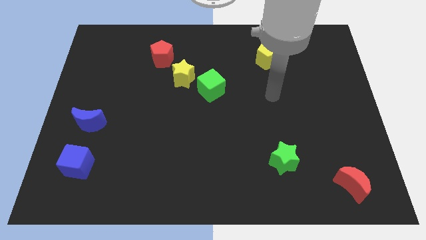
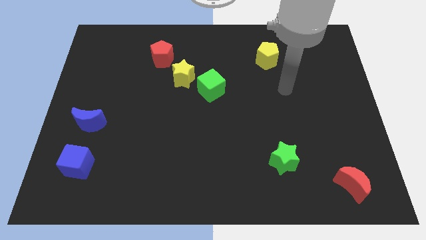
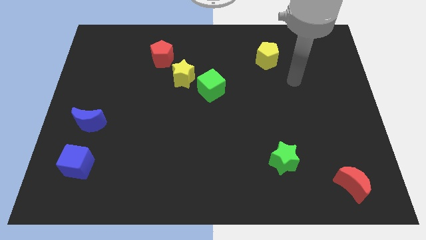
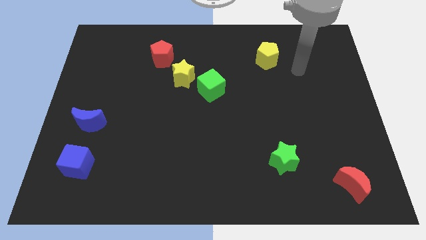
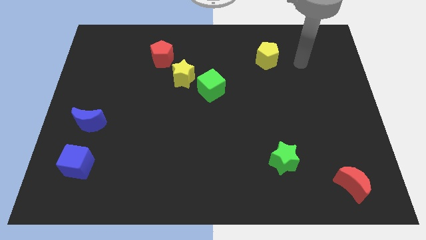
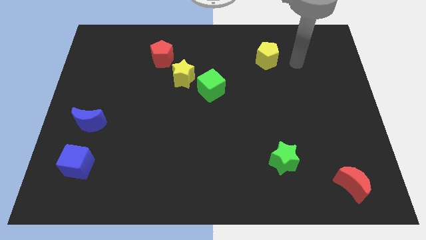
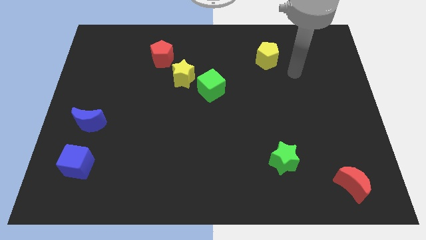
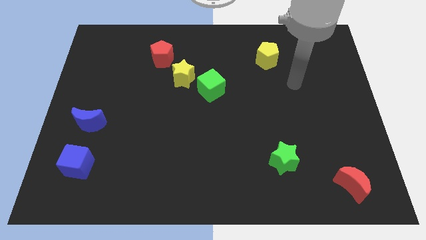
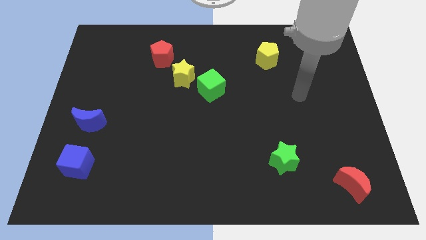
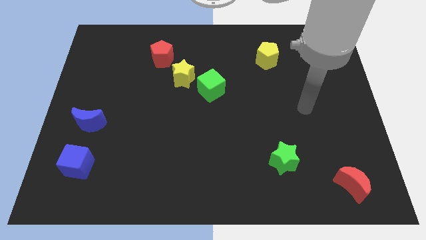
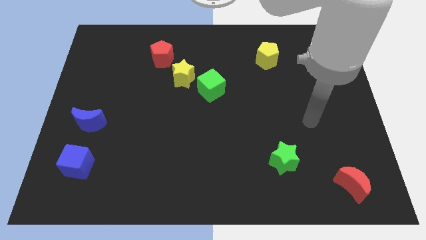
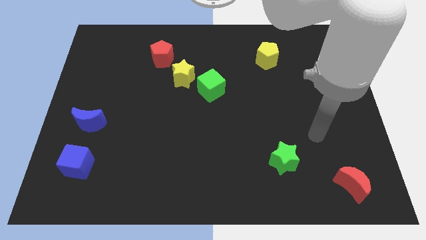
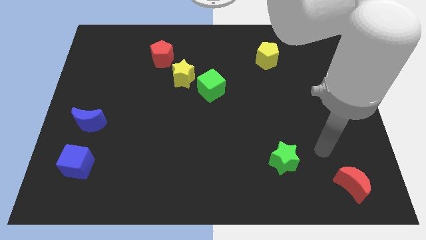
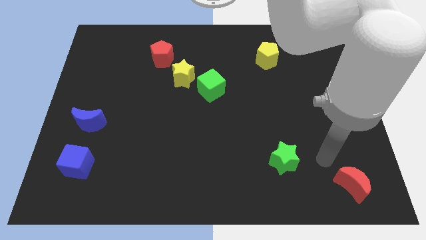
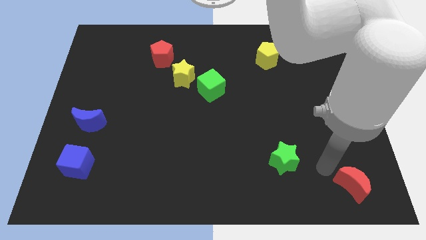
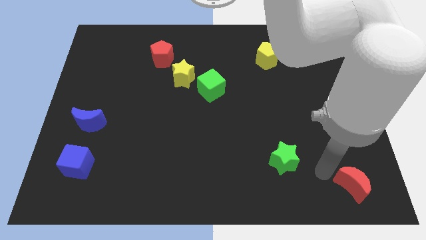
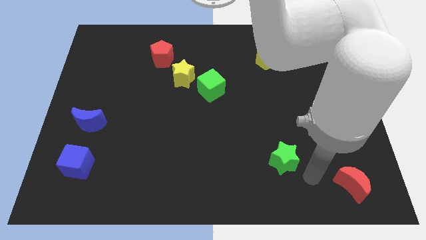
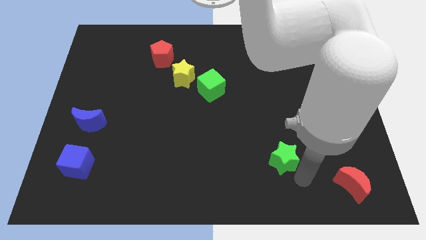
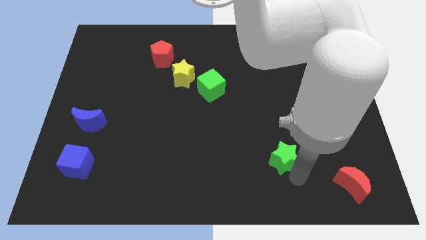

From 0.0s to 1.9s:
touch green star with your arm

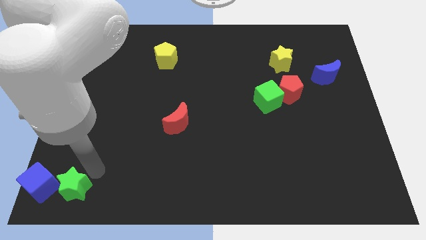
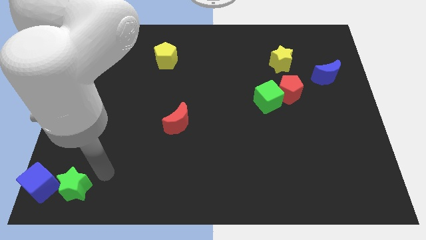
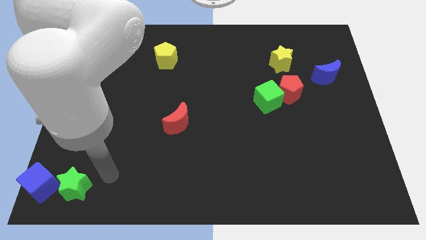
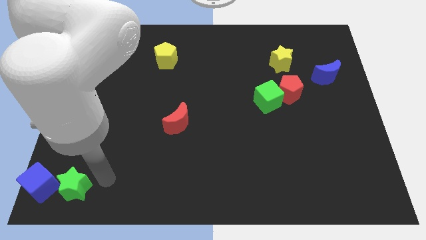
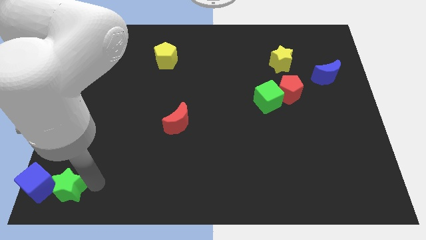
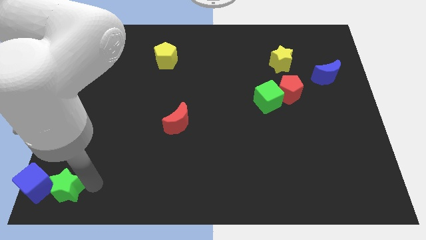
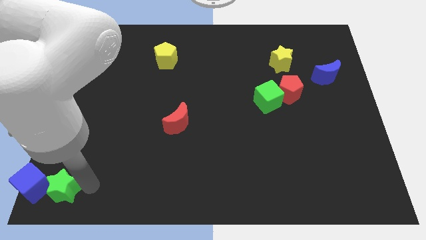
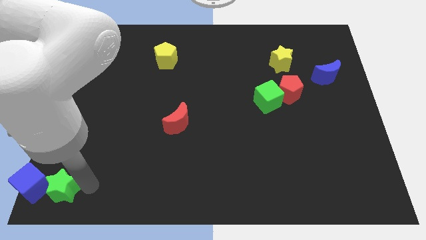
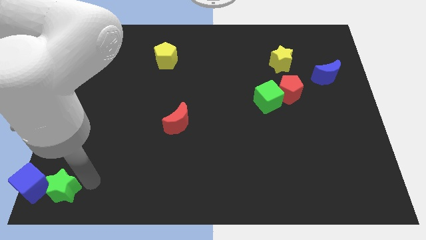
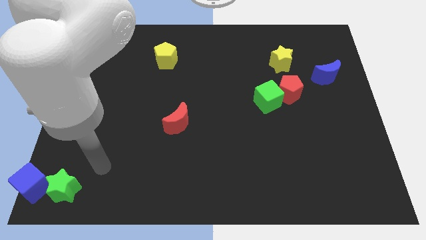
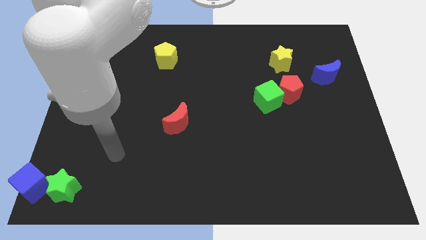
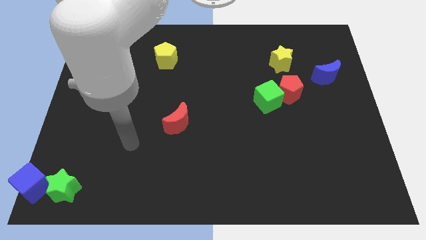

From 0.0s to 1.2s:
push blue cube and green star to the down left corner of the board

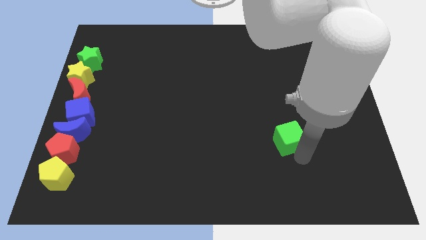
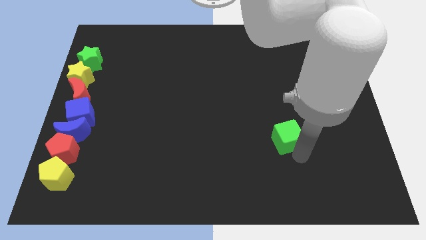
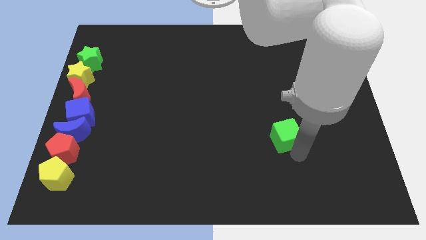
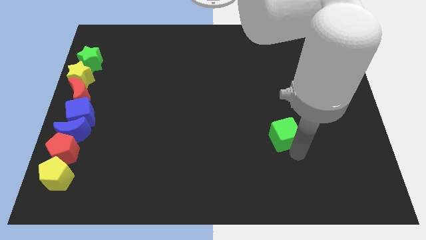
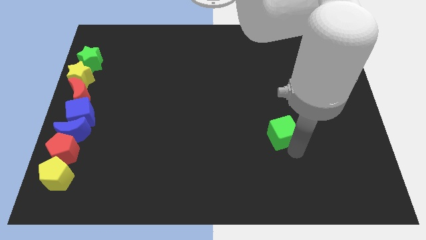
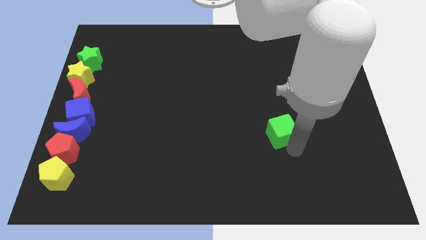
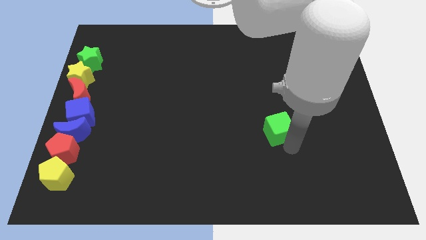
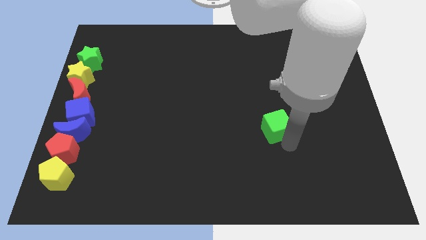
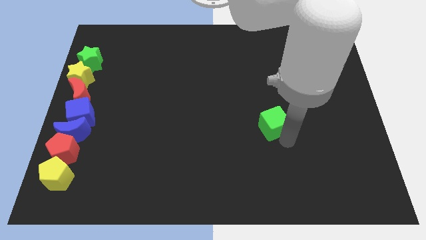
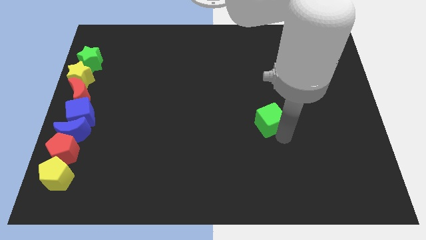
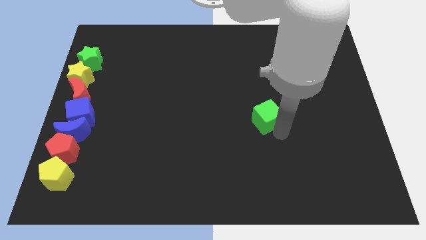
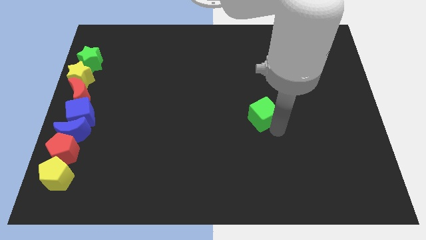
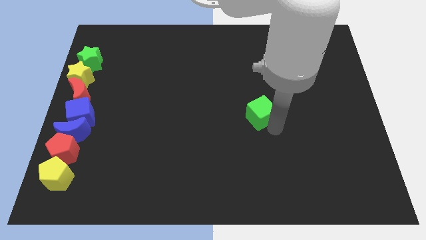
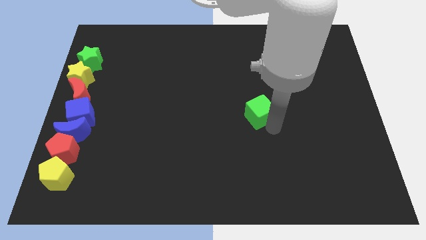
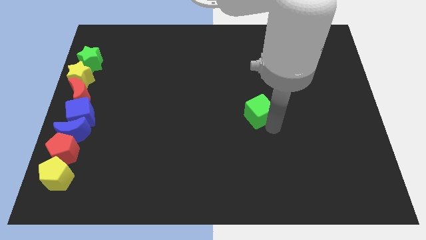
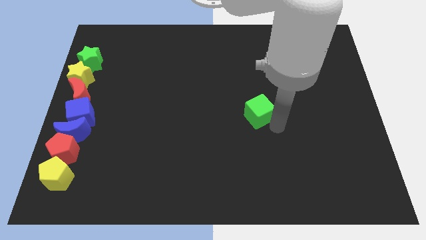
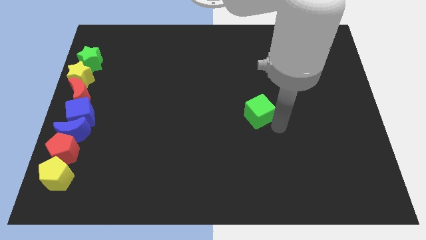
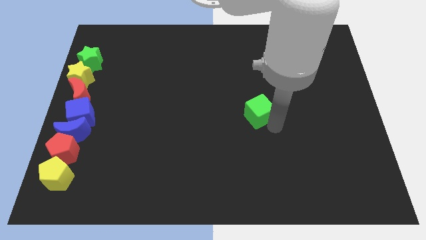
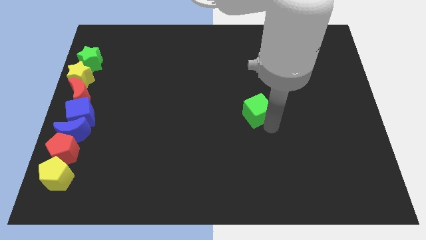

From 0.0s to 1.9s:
push green cube slightly towards upward

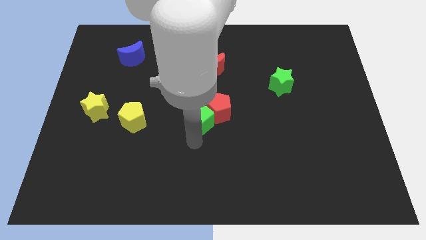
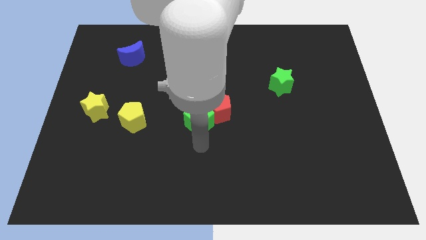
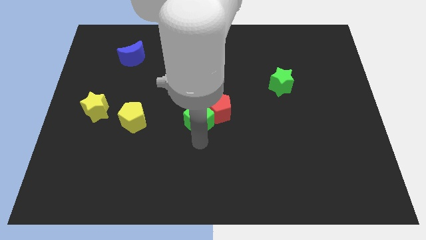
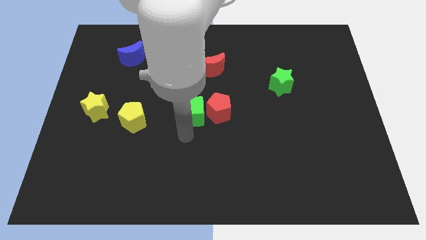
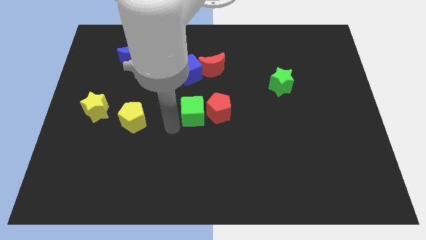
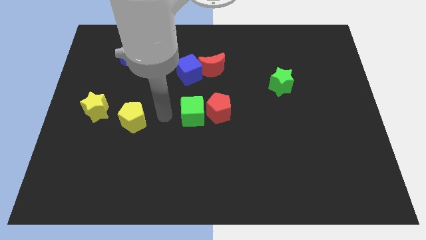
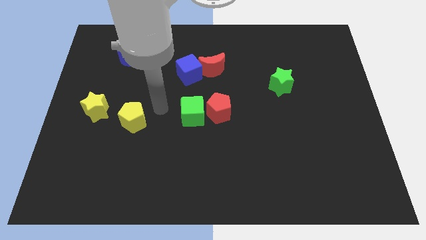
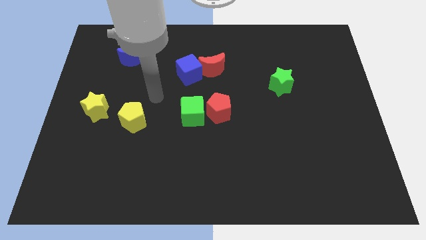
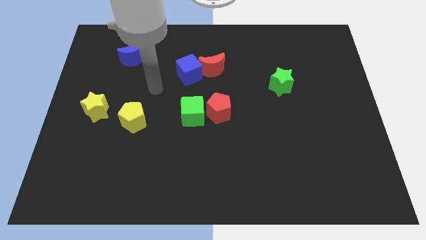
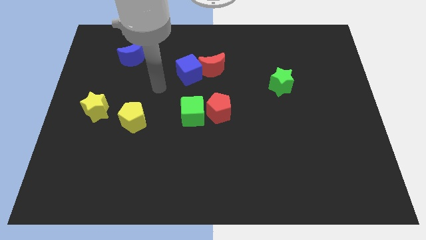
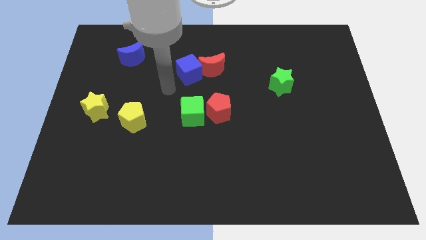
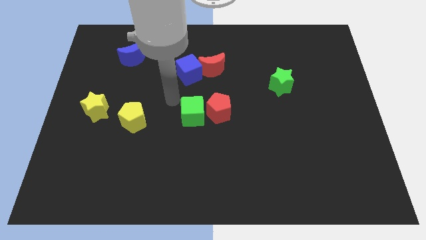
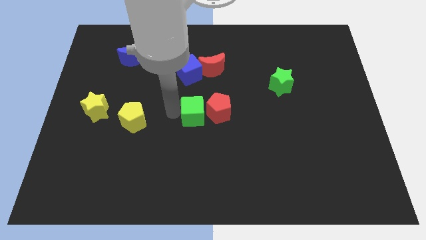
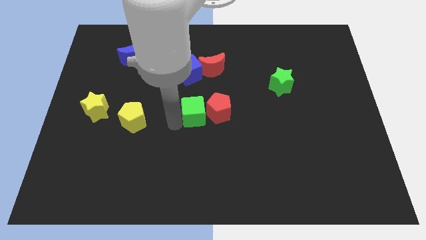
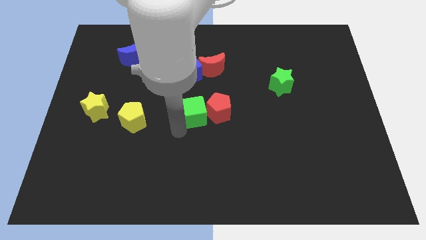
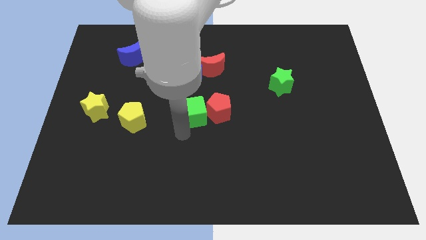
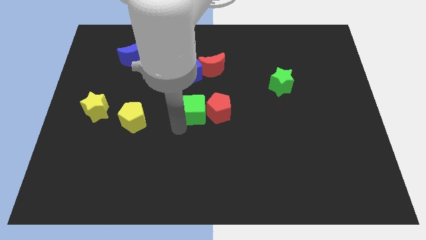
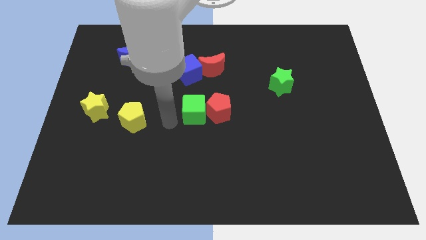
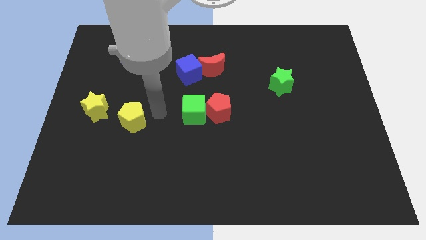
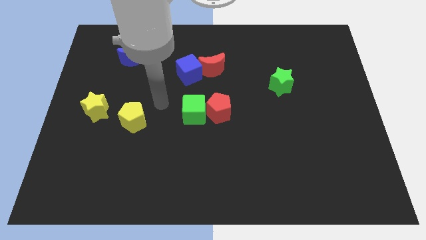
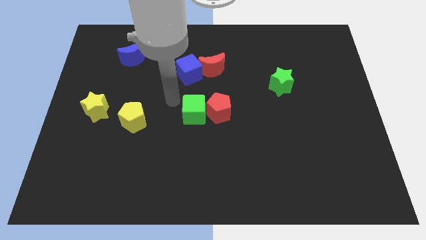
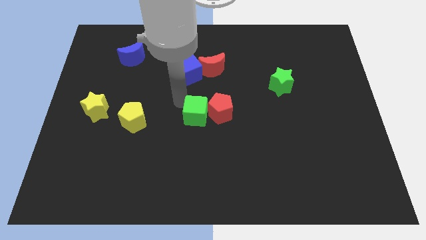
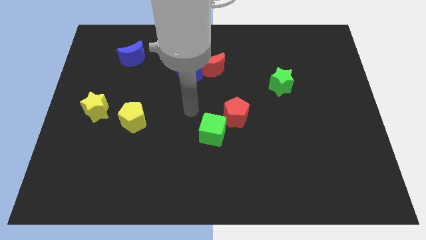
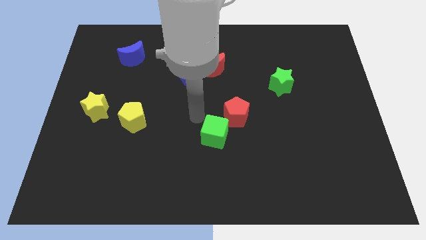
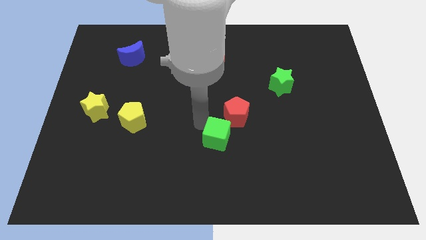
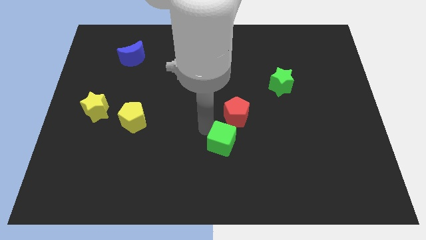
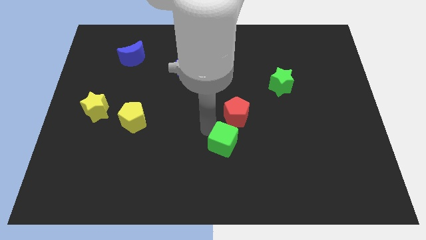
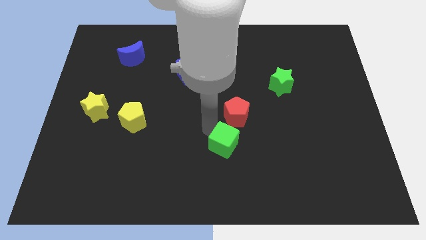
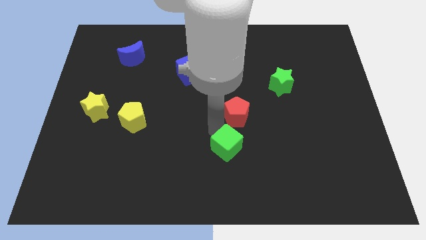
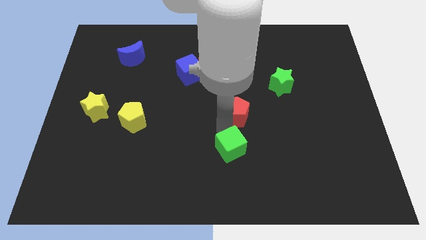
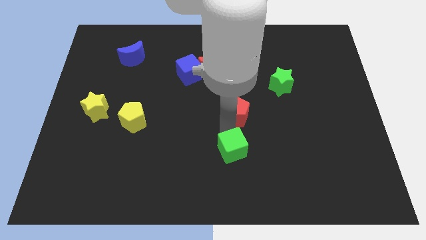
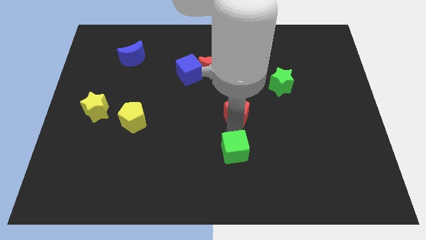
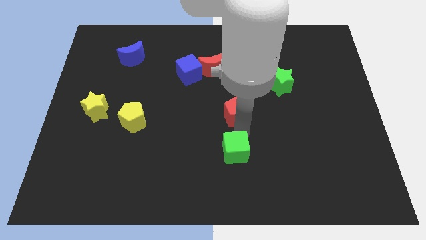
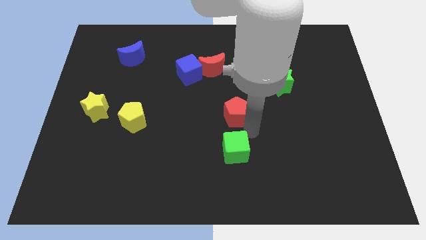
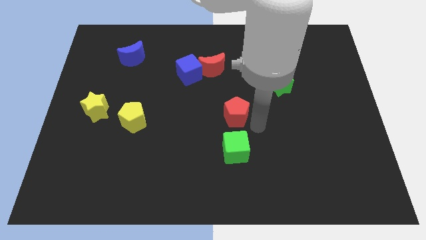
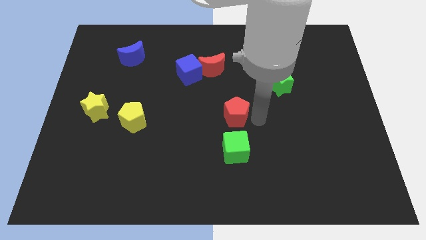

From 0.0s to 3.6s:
put the red pentagon above the green cube

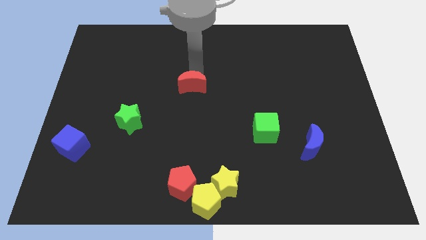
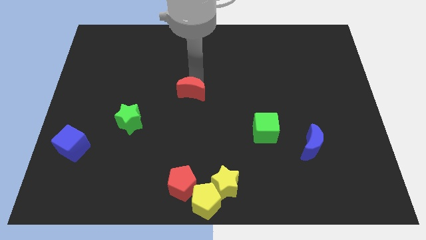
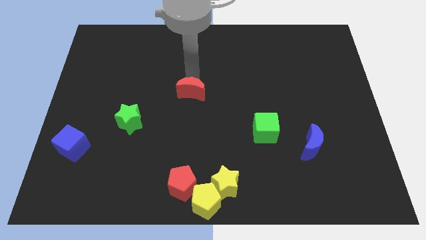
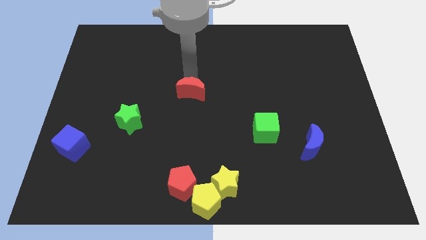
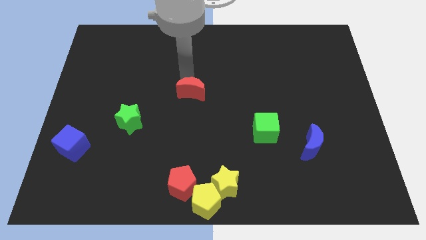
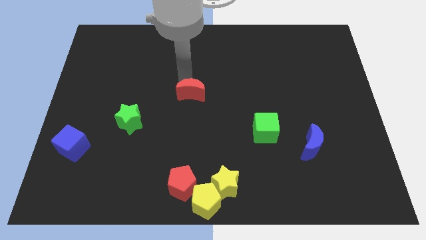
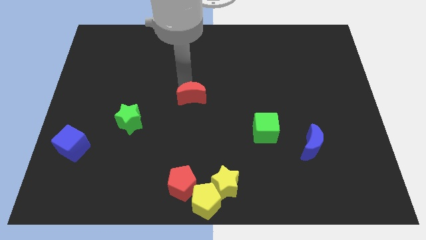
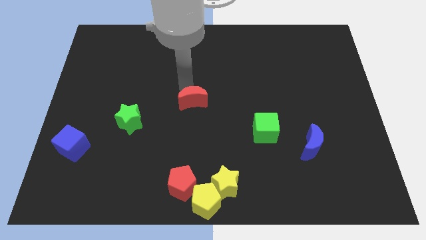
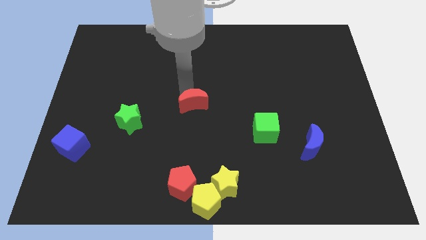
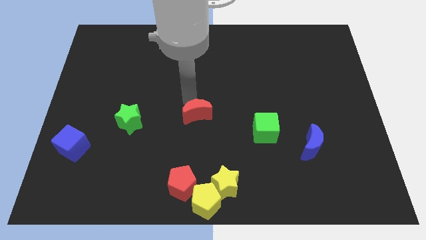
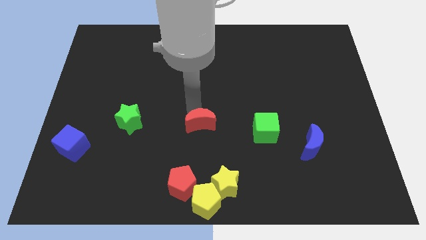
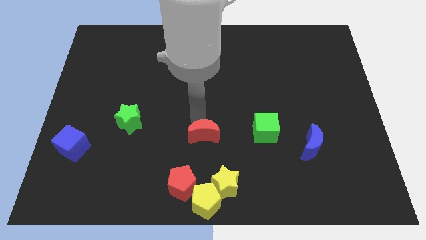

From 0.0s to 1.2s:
place red crescent in between green star and green cube
